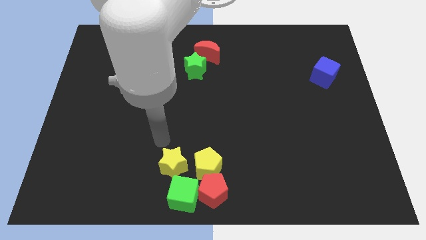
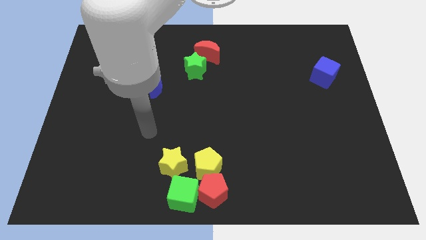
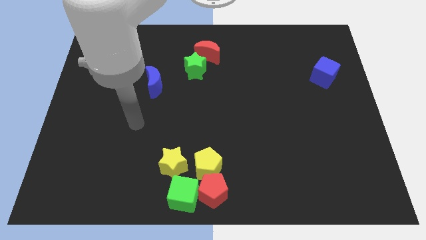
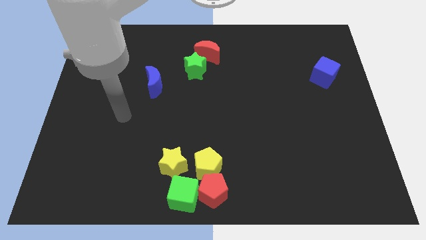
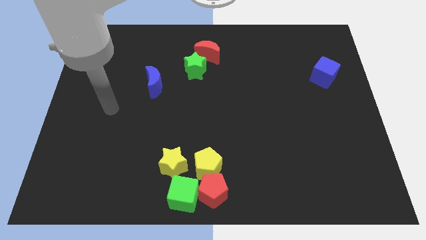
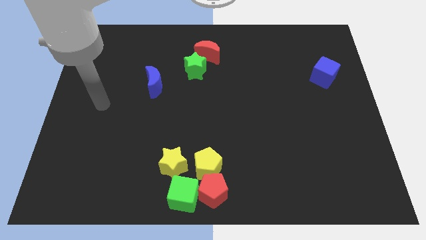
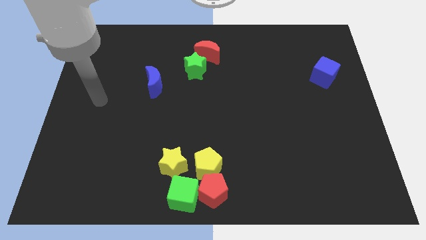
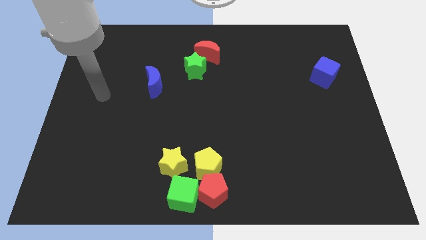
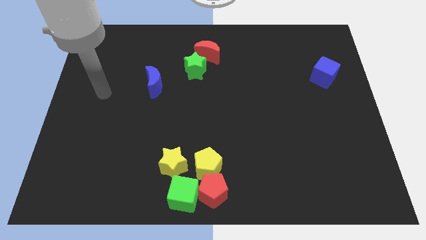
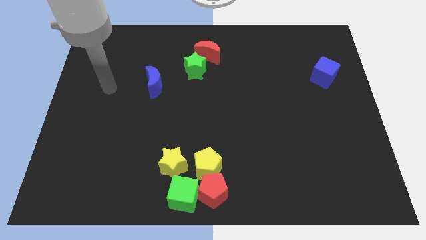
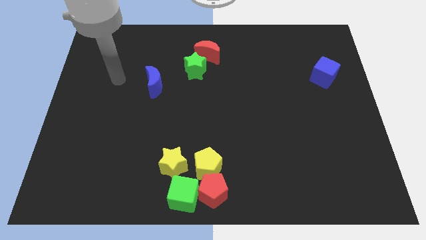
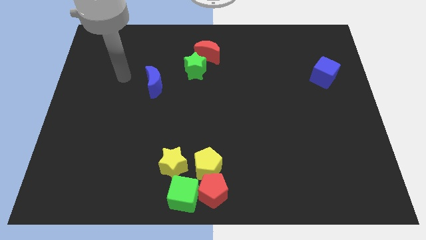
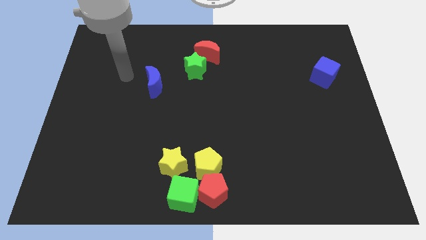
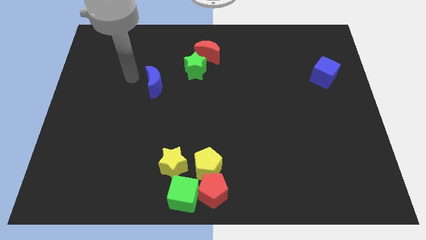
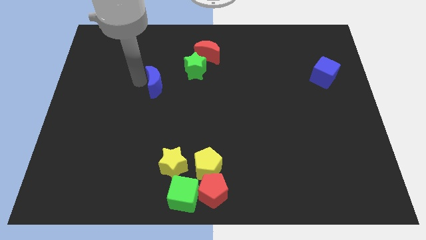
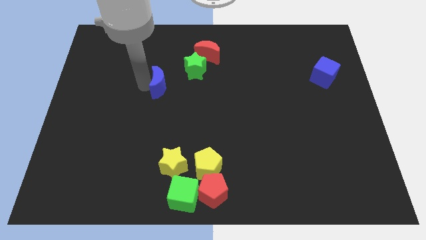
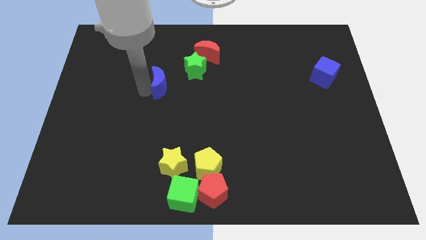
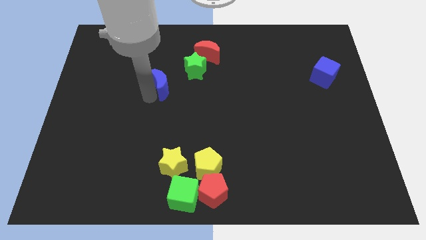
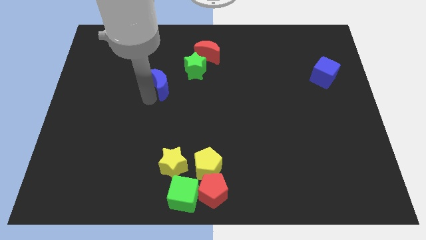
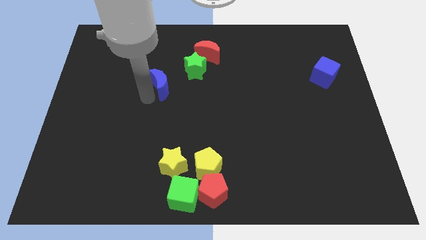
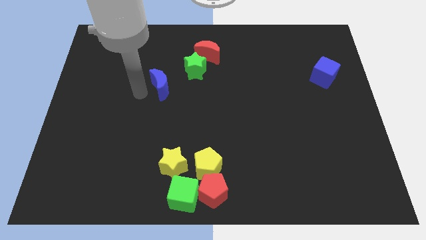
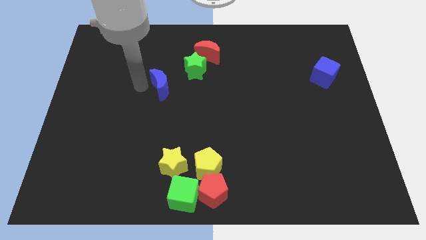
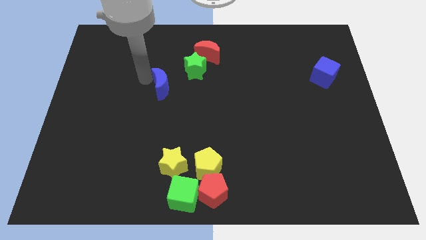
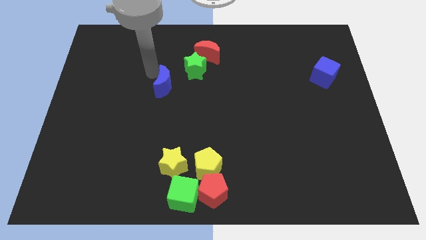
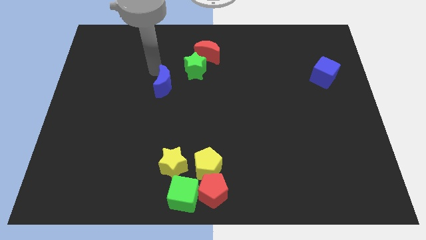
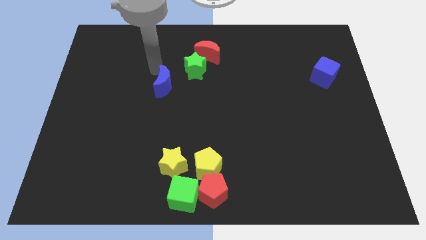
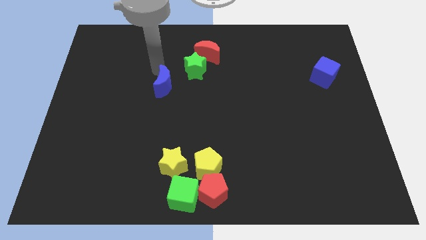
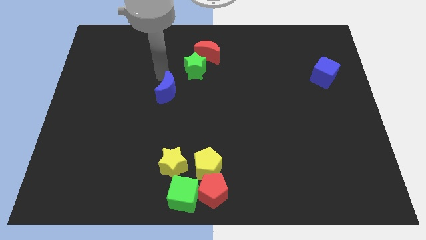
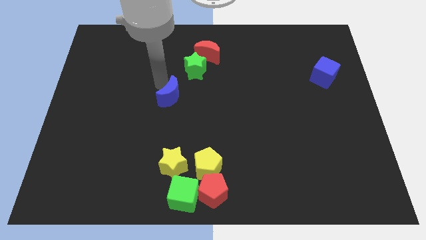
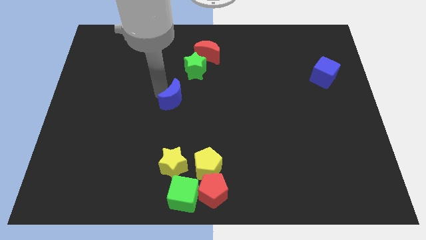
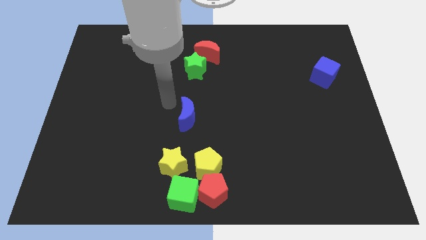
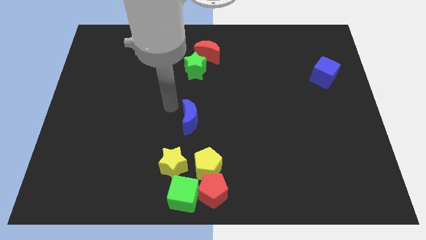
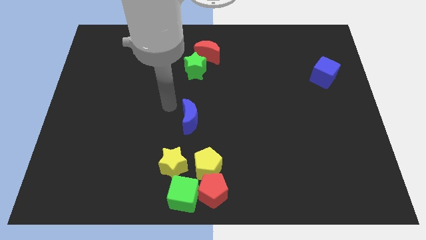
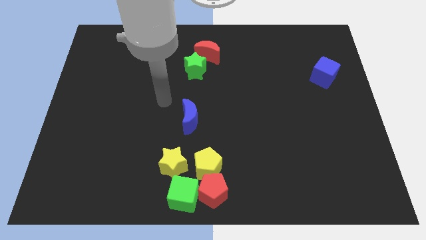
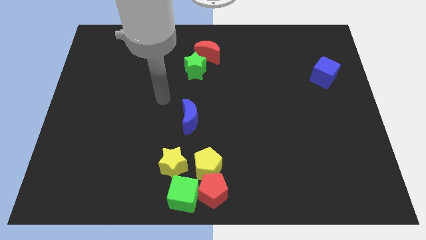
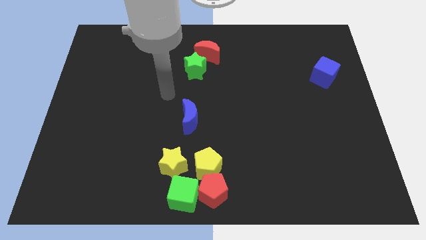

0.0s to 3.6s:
move the blue crescent below the green star

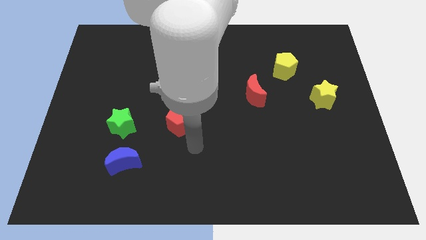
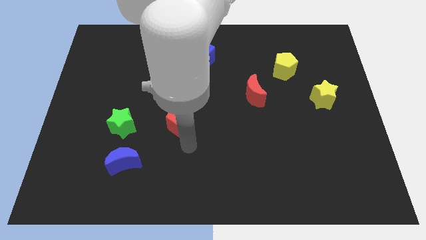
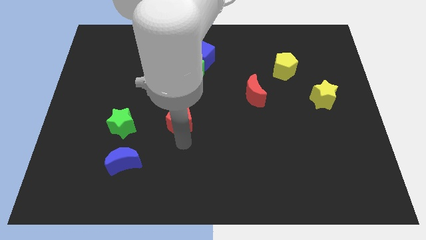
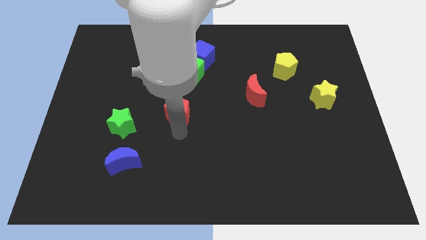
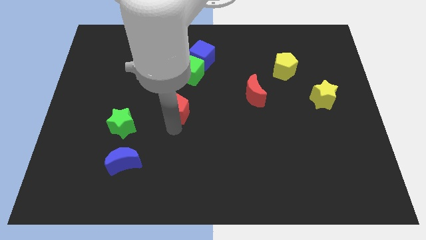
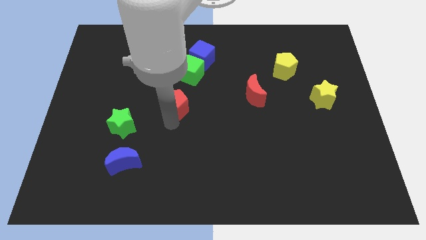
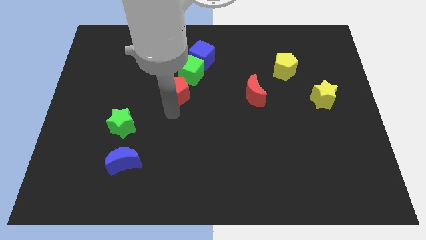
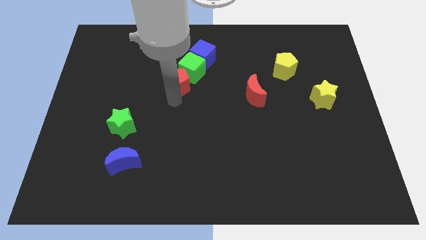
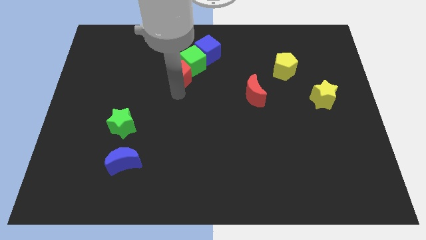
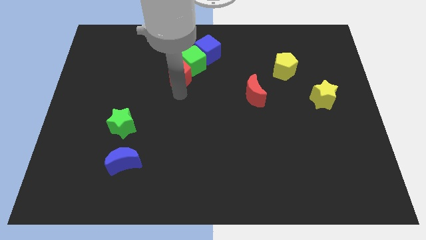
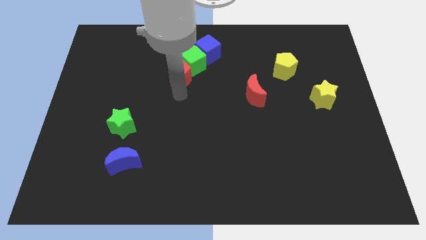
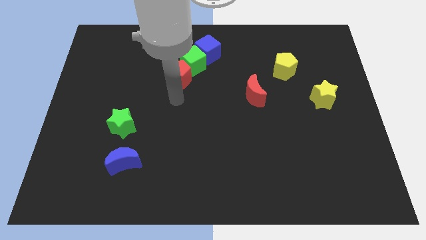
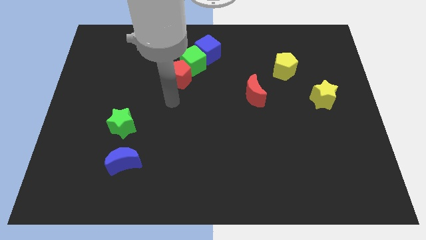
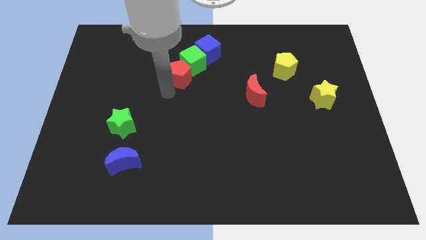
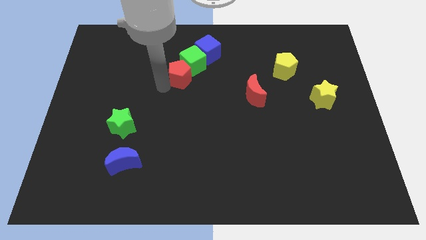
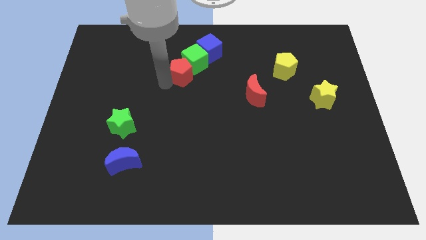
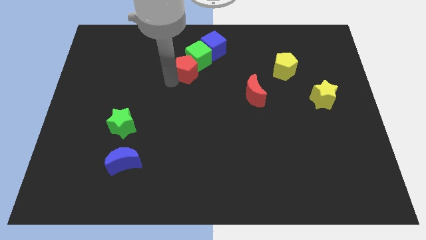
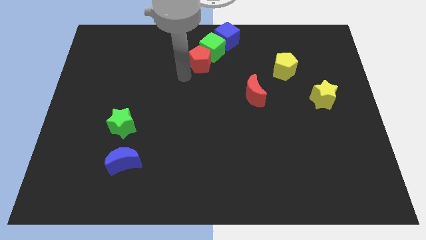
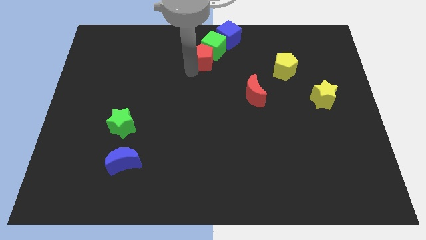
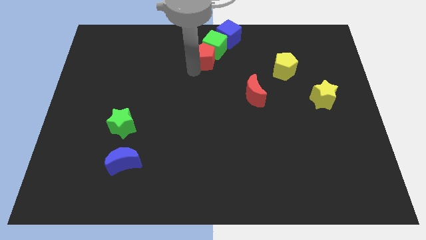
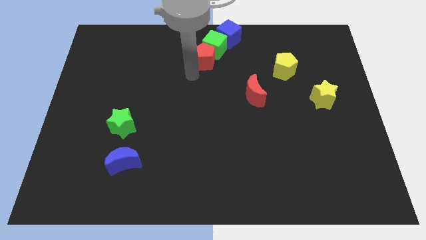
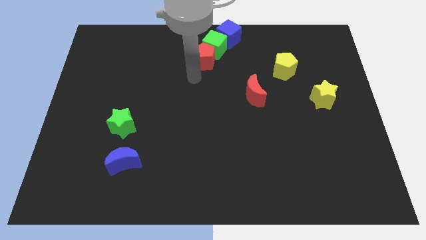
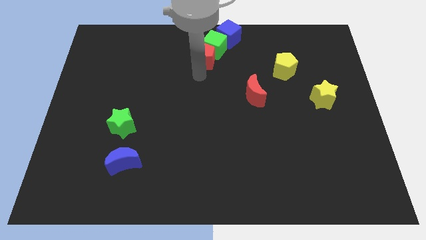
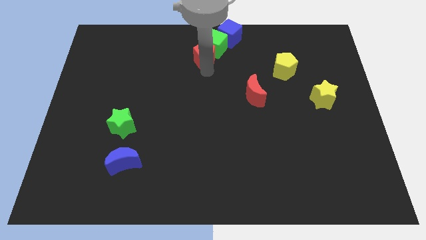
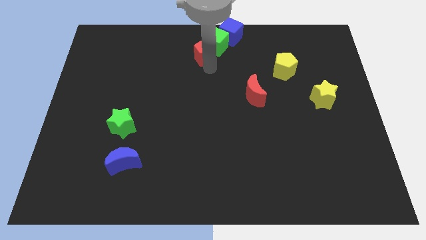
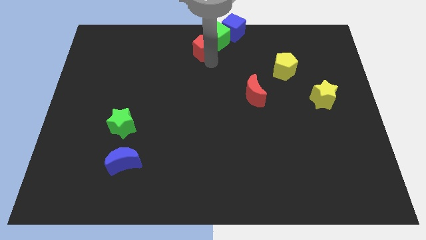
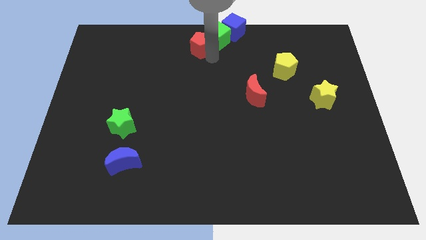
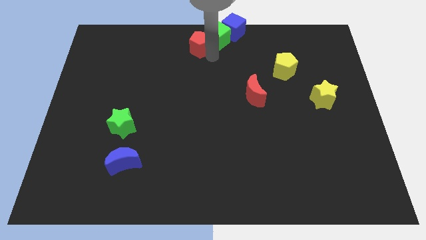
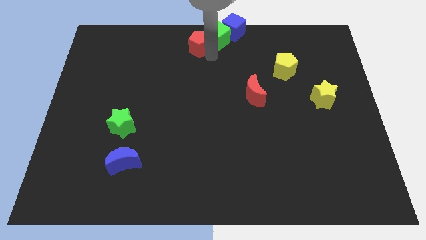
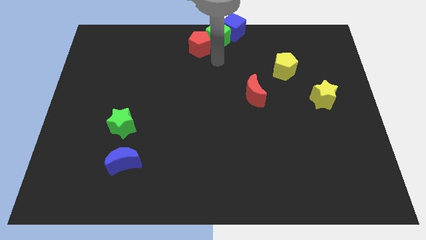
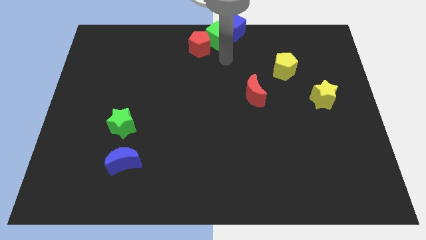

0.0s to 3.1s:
push the red pentagon into the green cube at the center top of the board

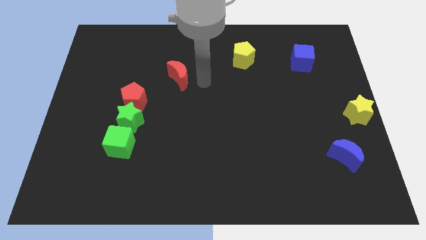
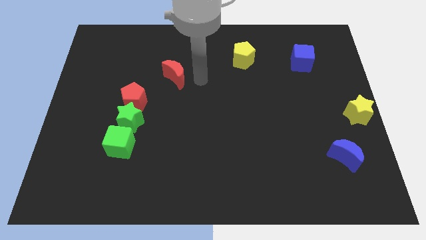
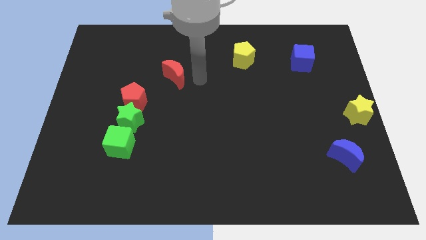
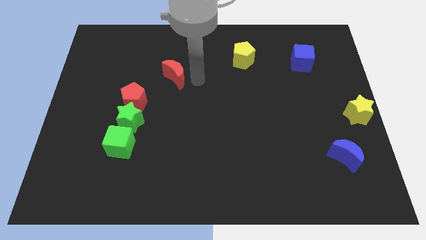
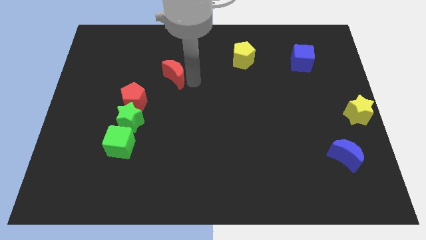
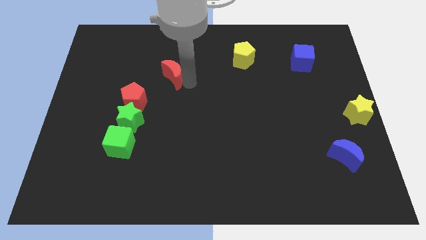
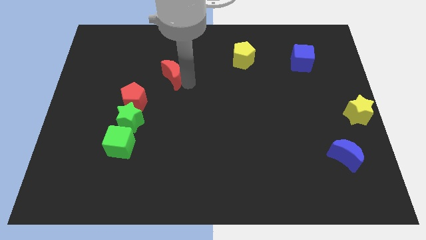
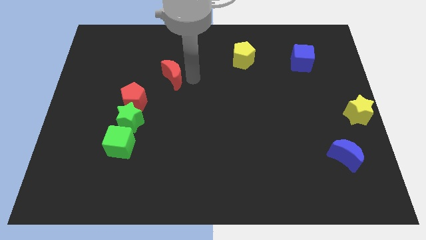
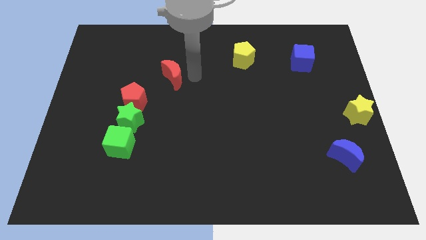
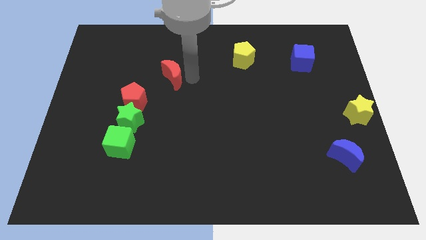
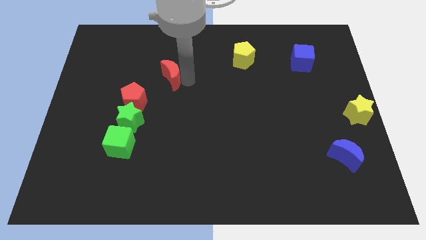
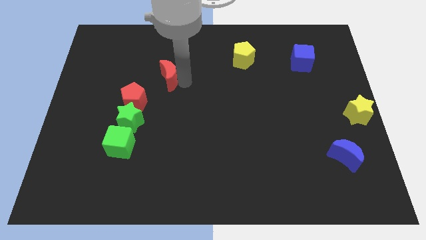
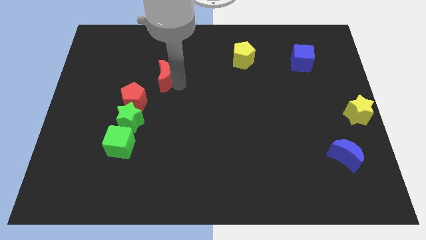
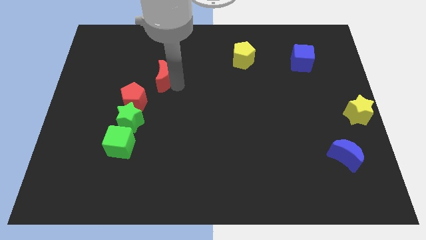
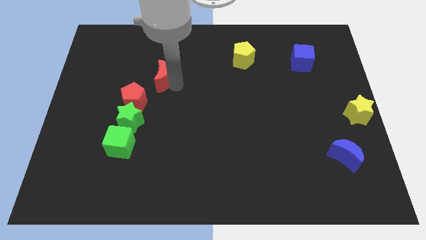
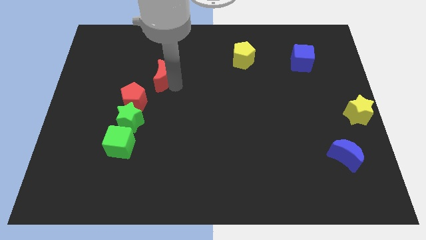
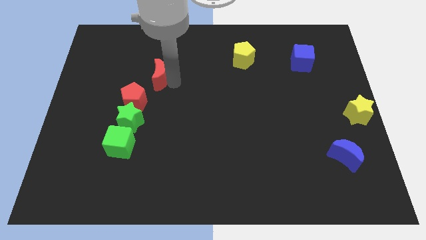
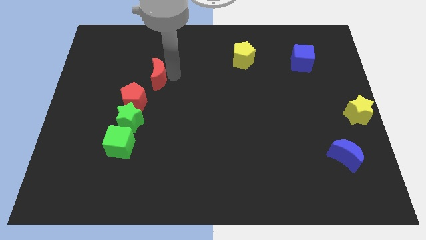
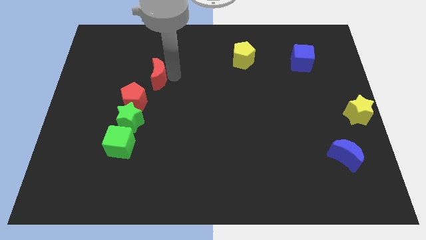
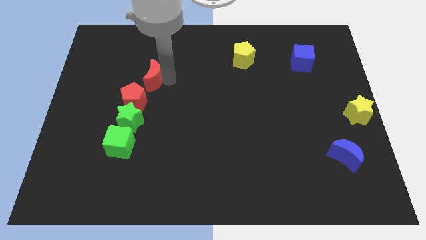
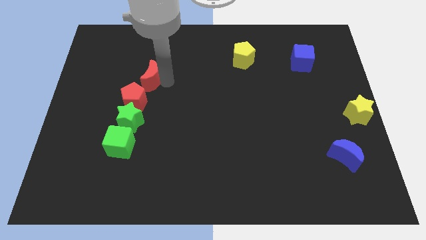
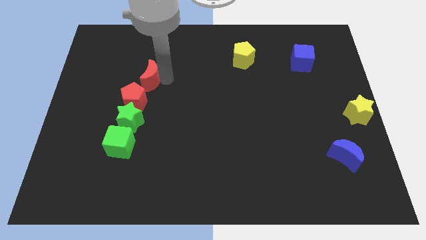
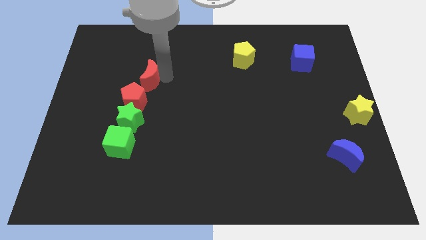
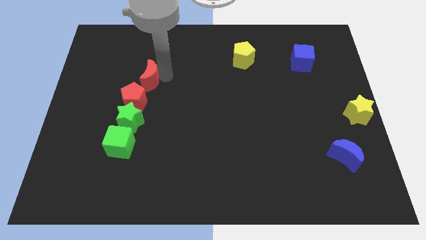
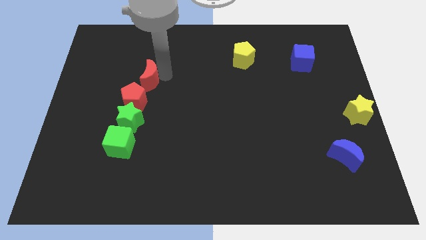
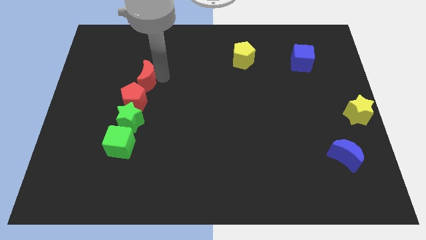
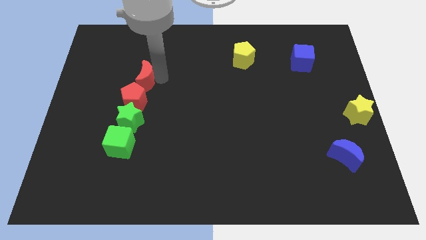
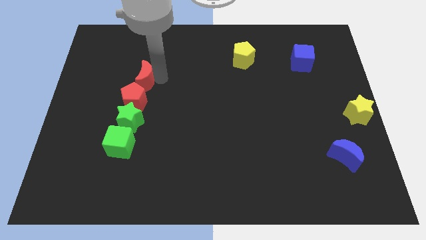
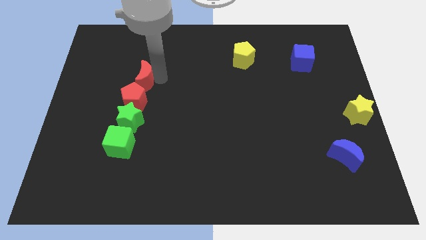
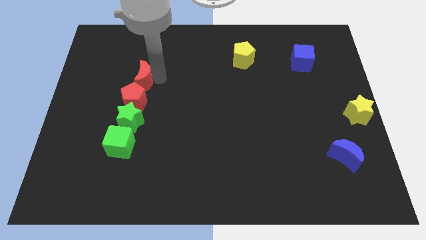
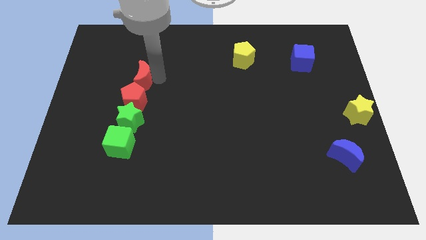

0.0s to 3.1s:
place the red moon at the top side of the red pentagon
